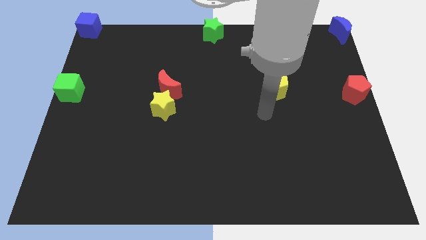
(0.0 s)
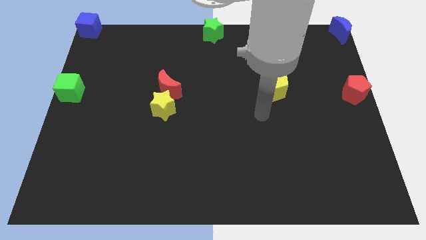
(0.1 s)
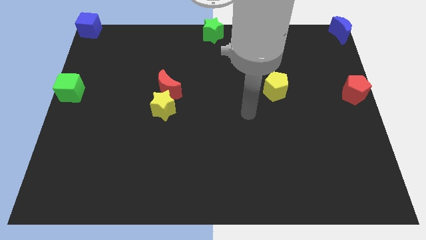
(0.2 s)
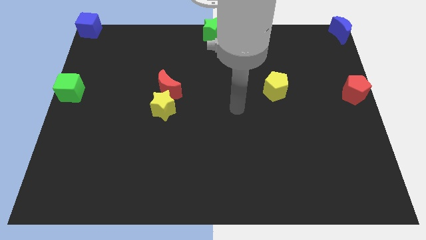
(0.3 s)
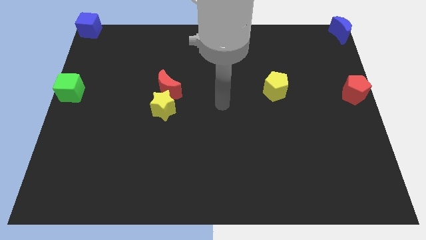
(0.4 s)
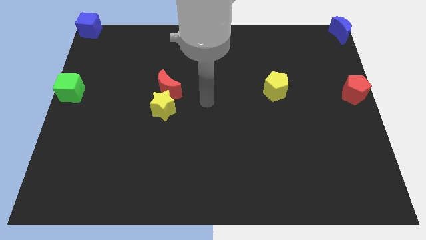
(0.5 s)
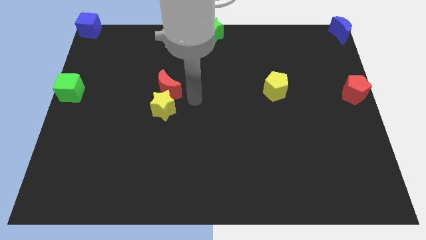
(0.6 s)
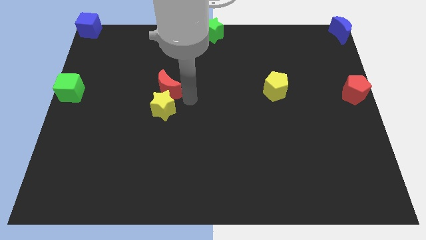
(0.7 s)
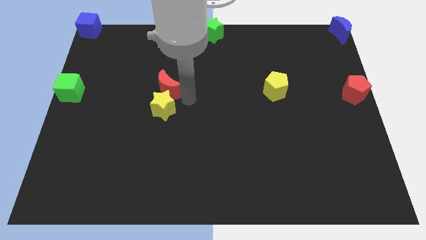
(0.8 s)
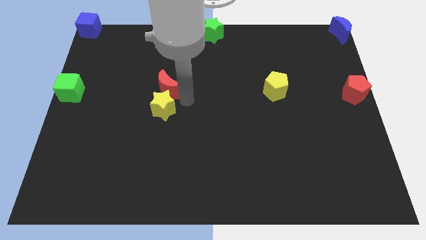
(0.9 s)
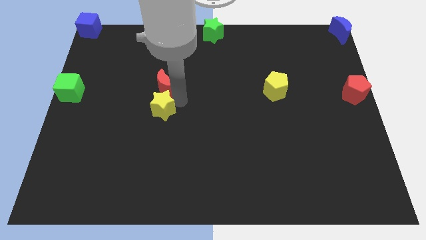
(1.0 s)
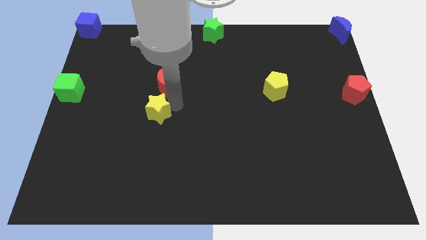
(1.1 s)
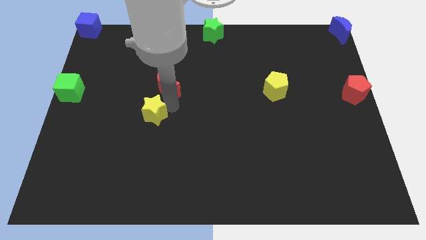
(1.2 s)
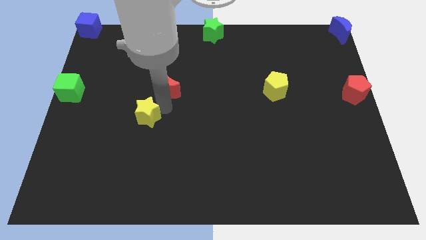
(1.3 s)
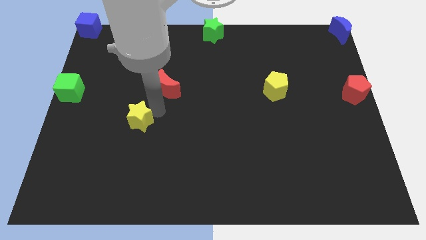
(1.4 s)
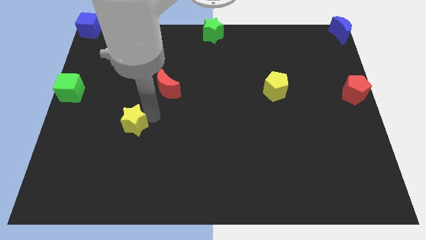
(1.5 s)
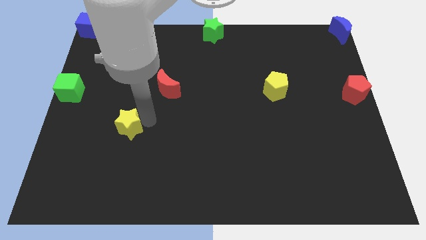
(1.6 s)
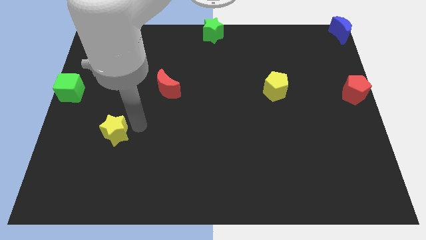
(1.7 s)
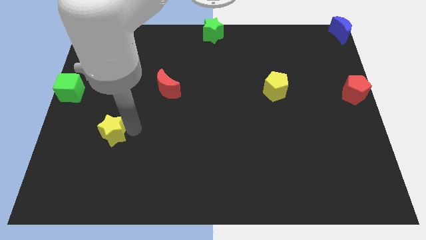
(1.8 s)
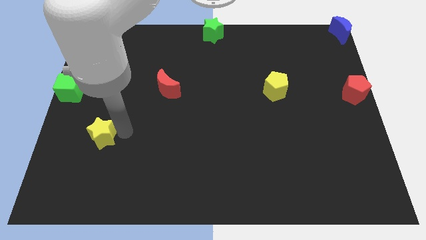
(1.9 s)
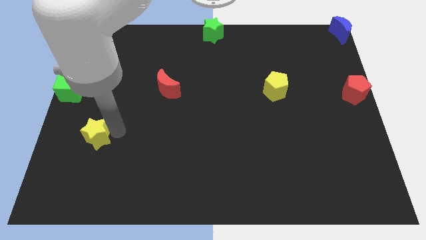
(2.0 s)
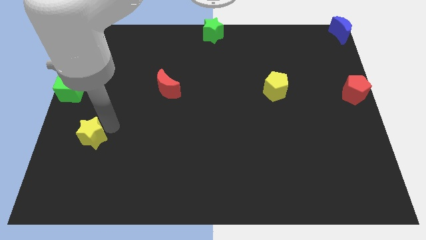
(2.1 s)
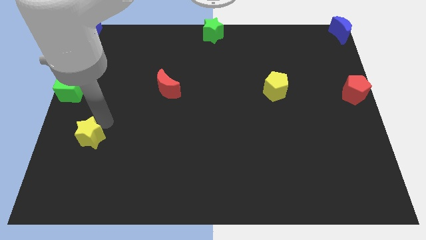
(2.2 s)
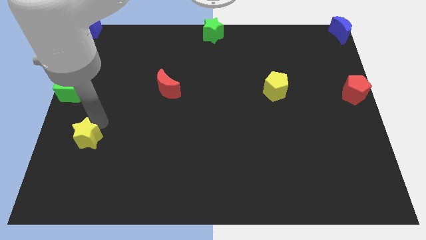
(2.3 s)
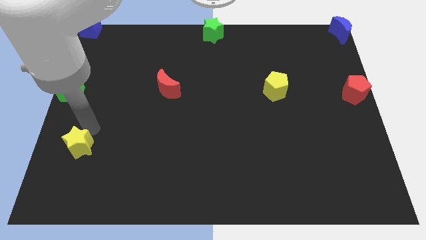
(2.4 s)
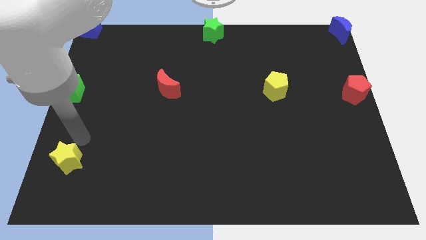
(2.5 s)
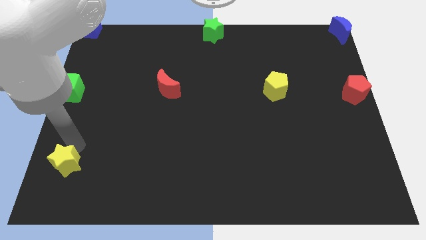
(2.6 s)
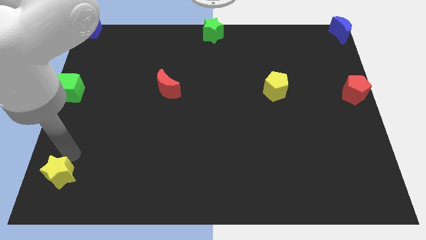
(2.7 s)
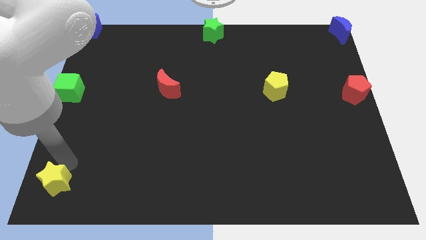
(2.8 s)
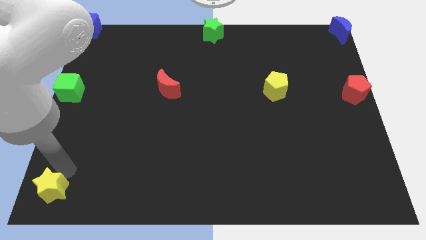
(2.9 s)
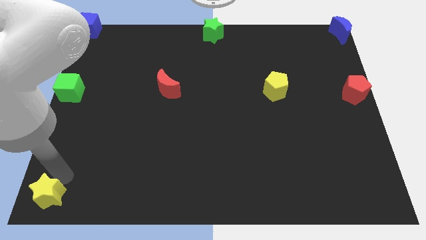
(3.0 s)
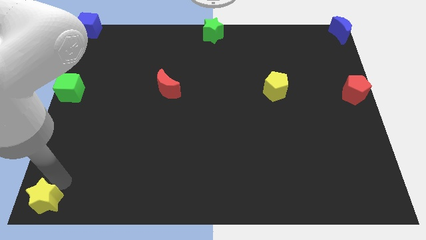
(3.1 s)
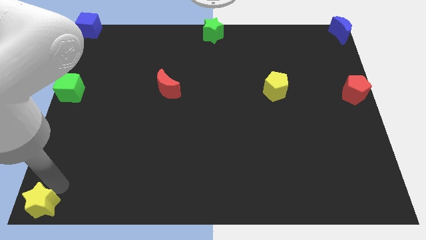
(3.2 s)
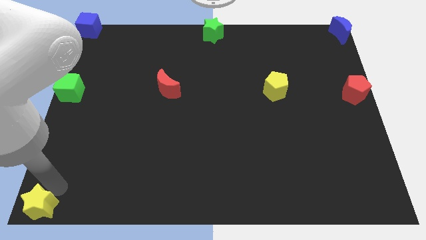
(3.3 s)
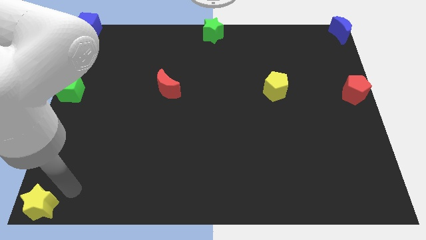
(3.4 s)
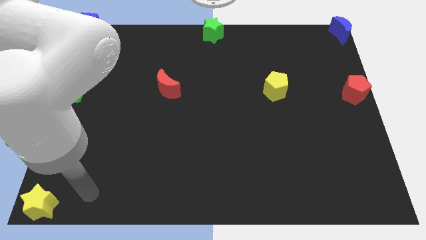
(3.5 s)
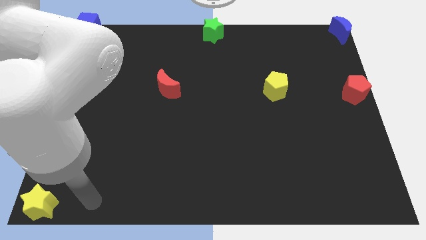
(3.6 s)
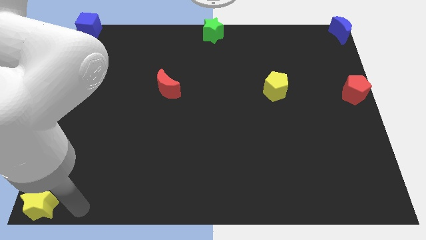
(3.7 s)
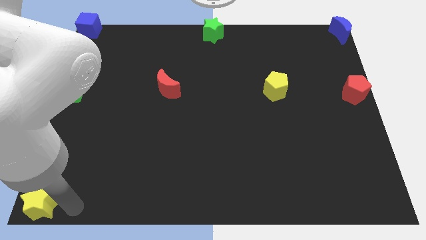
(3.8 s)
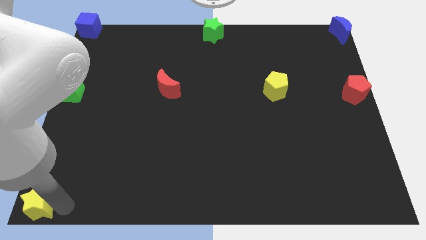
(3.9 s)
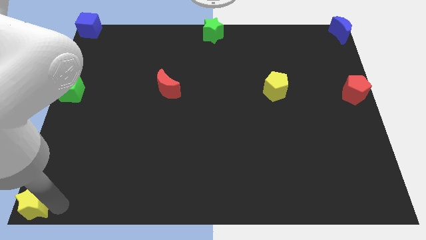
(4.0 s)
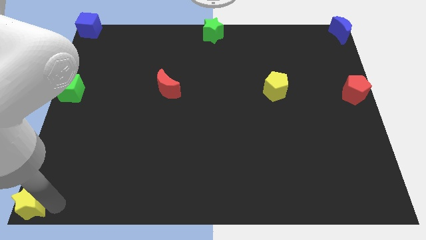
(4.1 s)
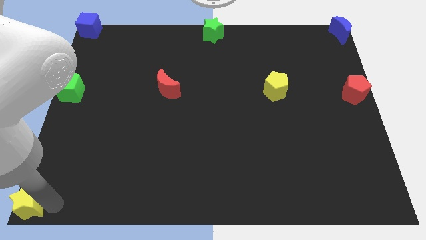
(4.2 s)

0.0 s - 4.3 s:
place the yellow star at the bottom left corner of the board

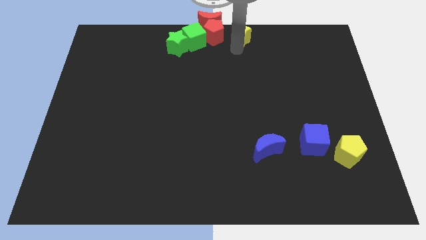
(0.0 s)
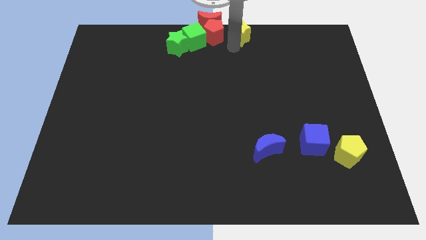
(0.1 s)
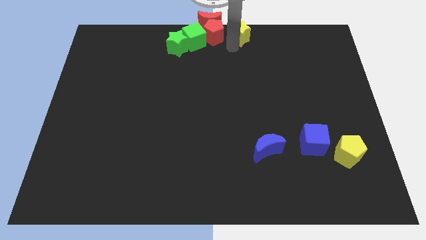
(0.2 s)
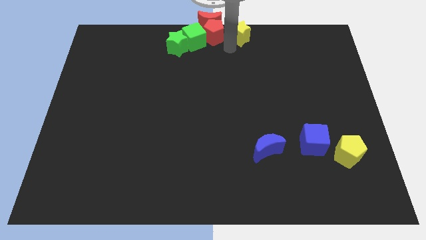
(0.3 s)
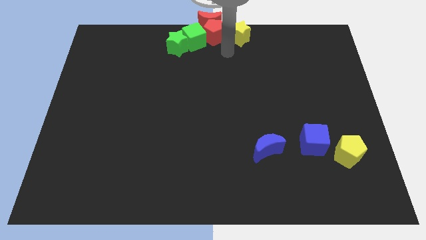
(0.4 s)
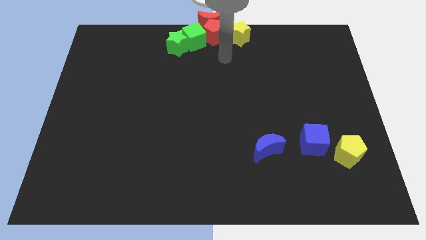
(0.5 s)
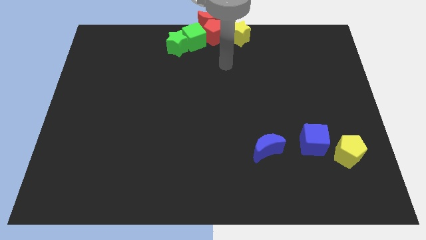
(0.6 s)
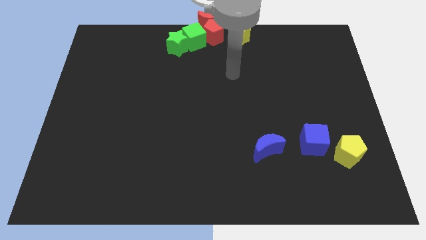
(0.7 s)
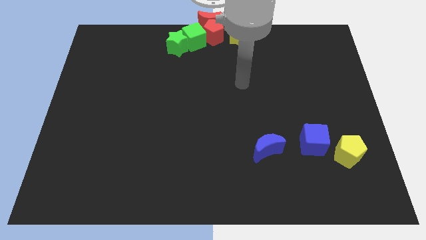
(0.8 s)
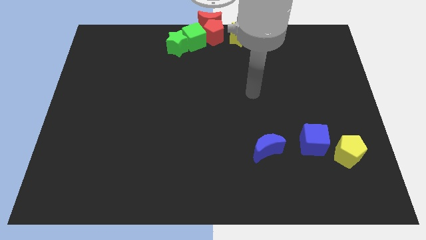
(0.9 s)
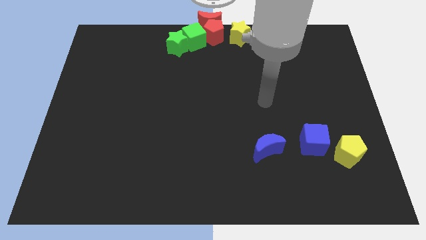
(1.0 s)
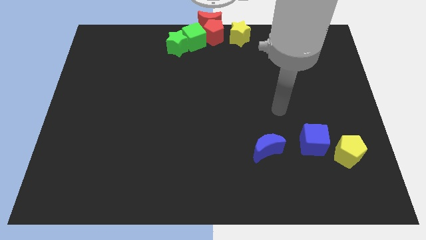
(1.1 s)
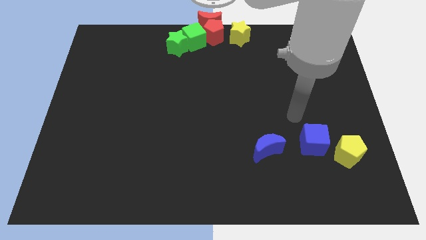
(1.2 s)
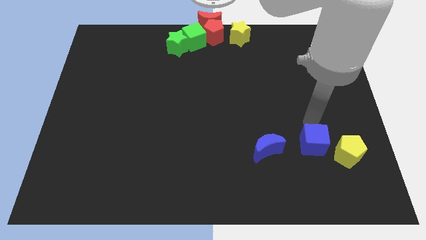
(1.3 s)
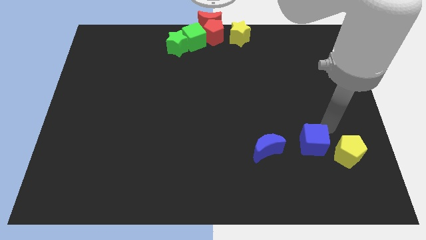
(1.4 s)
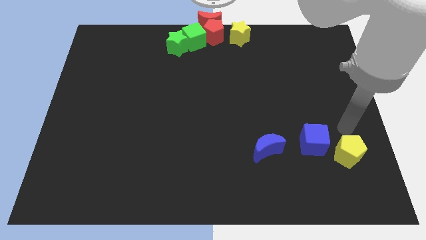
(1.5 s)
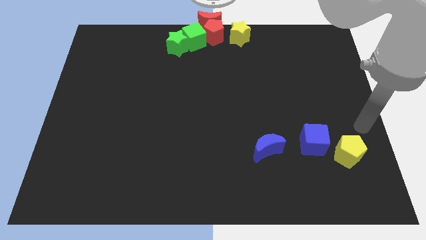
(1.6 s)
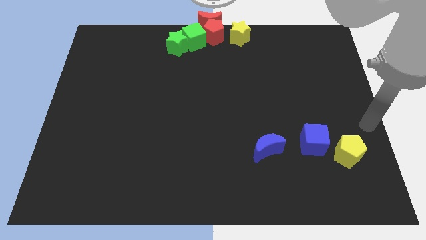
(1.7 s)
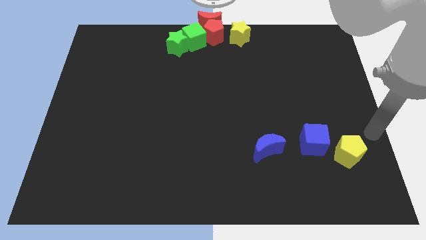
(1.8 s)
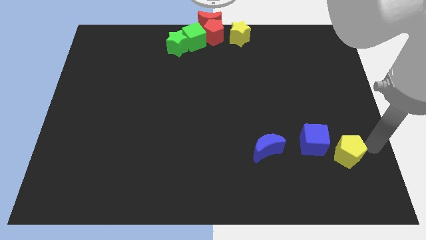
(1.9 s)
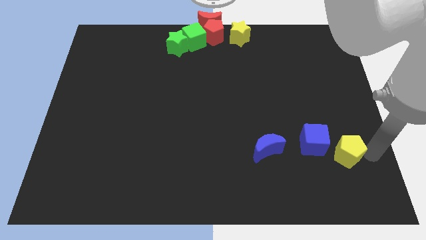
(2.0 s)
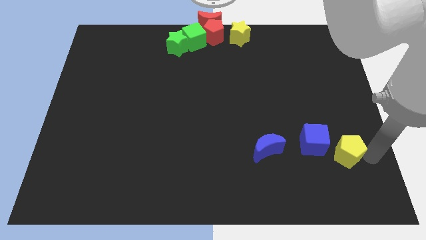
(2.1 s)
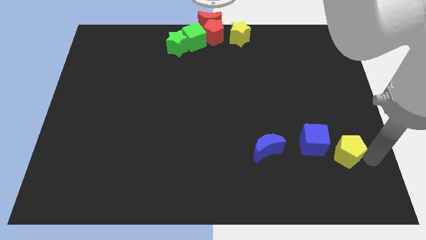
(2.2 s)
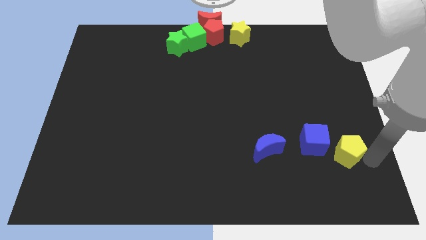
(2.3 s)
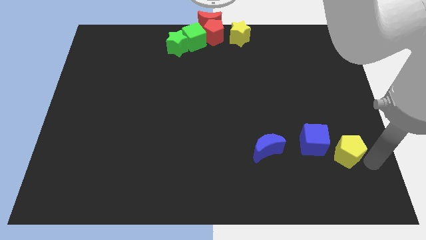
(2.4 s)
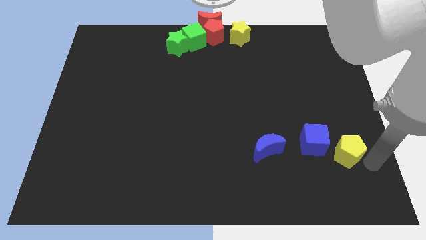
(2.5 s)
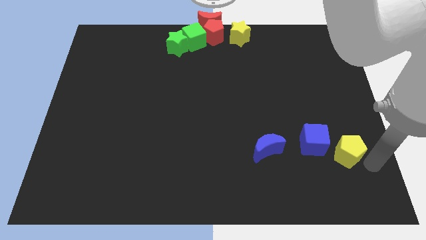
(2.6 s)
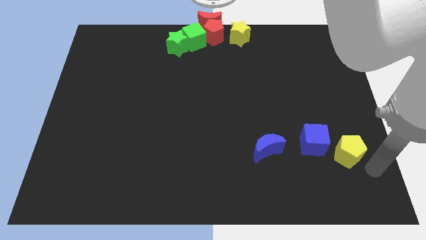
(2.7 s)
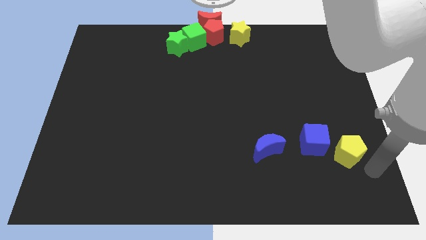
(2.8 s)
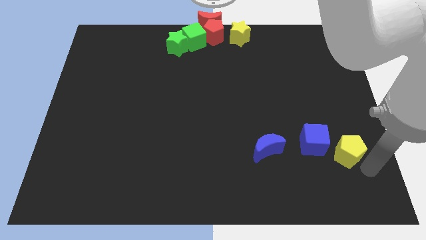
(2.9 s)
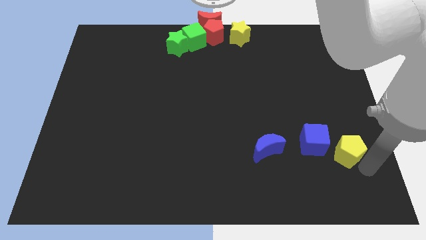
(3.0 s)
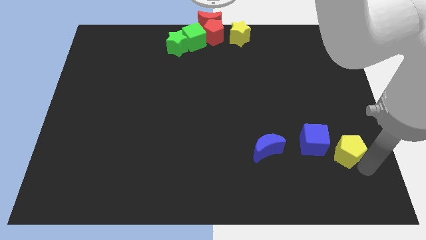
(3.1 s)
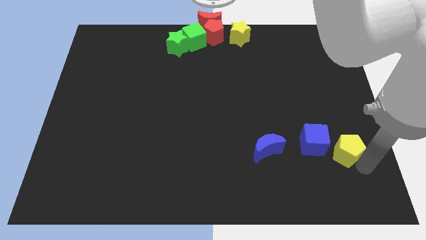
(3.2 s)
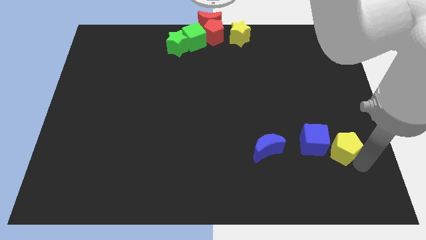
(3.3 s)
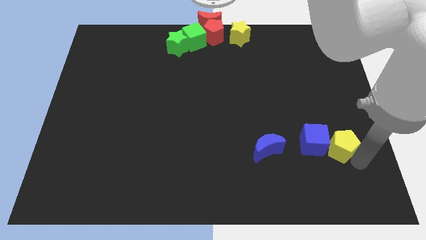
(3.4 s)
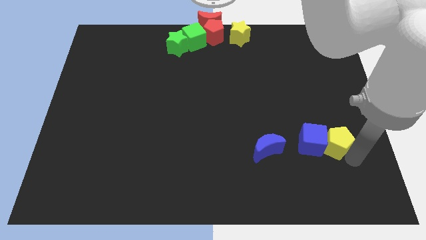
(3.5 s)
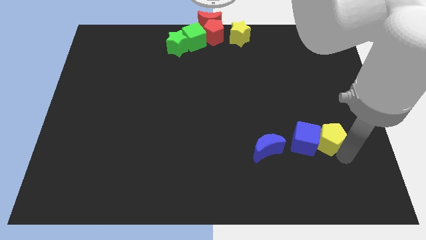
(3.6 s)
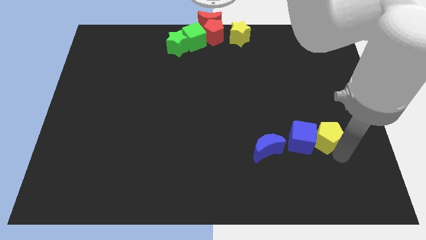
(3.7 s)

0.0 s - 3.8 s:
move the yellow pentagon into the right side of the blue cube

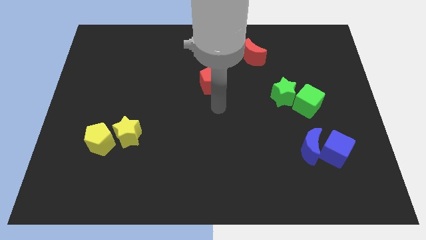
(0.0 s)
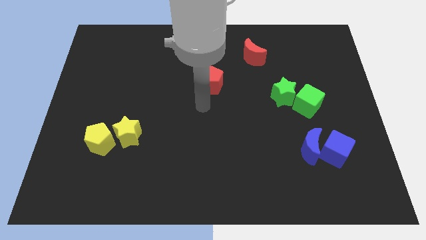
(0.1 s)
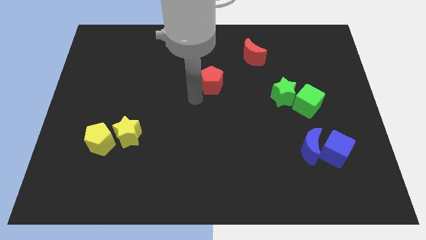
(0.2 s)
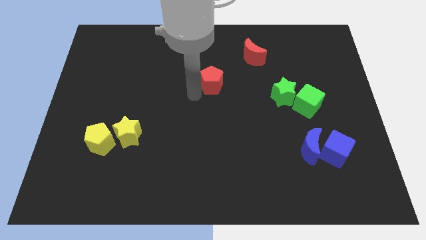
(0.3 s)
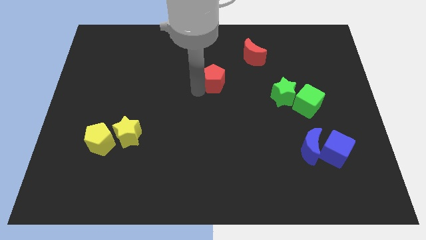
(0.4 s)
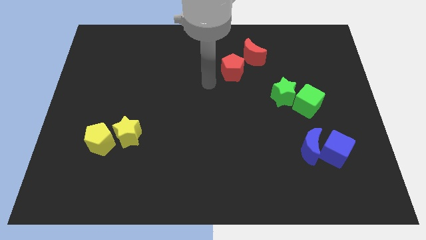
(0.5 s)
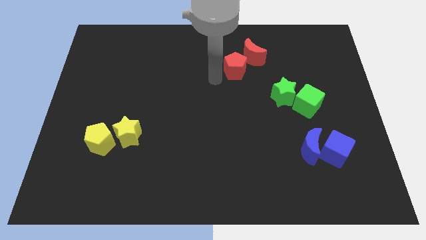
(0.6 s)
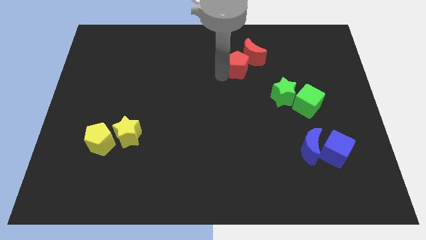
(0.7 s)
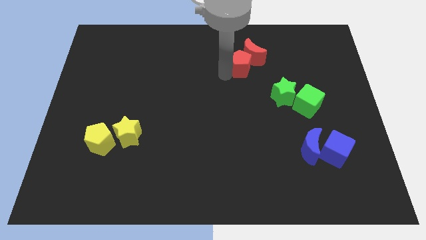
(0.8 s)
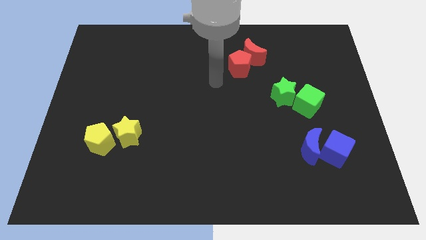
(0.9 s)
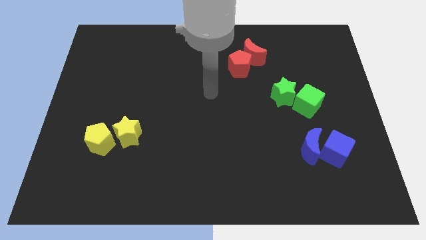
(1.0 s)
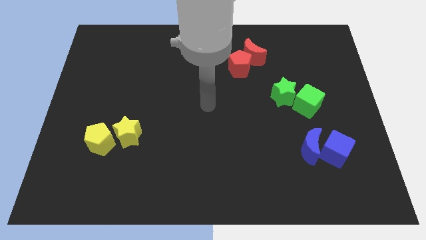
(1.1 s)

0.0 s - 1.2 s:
push the red pentagon towards the red moon
